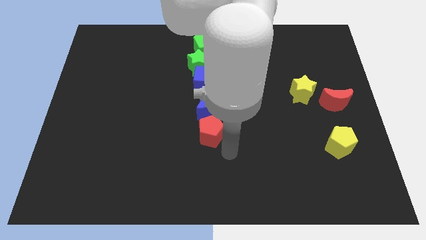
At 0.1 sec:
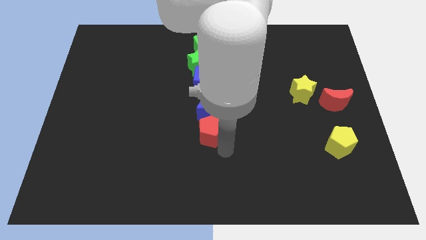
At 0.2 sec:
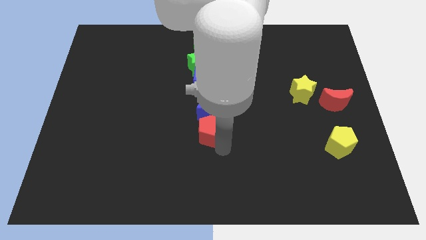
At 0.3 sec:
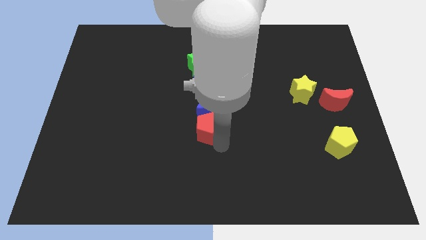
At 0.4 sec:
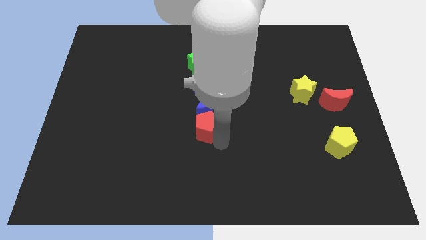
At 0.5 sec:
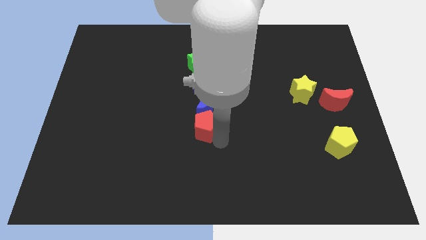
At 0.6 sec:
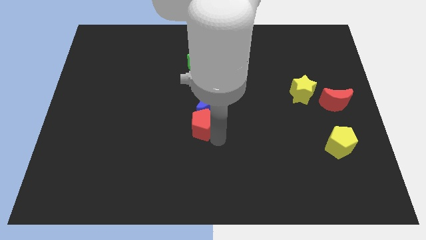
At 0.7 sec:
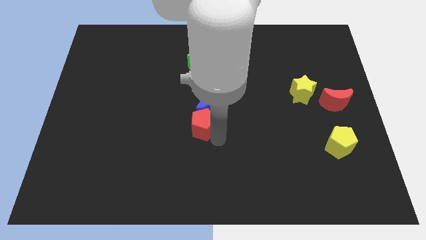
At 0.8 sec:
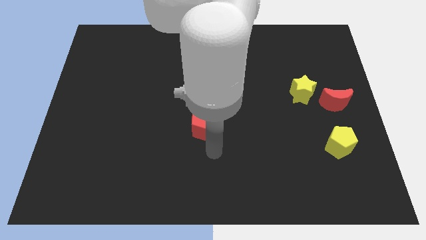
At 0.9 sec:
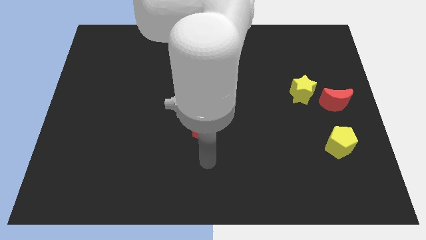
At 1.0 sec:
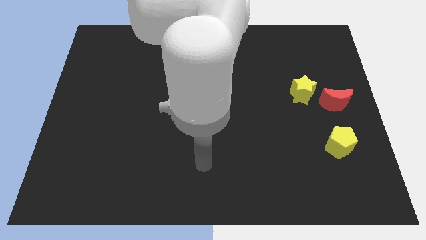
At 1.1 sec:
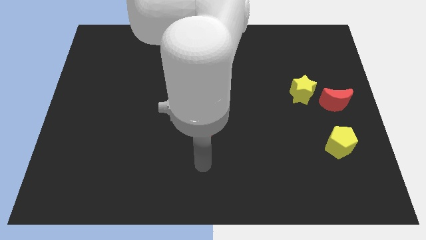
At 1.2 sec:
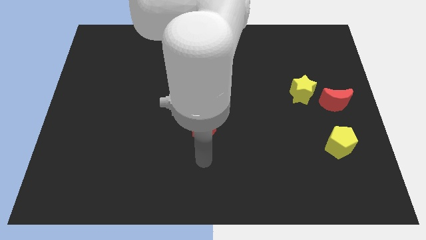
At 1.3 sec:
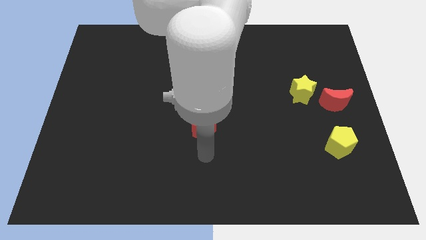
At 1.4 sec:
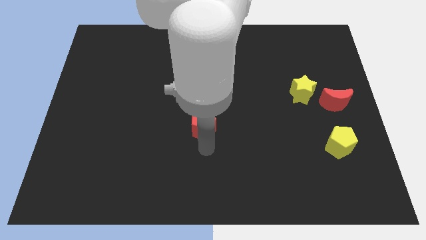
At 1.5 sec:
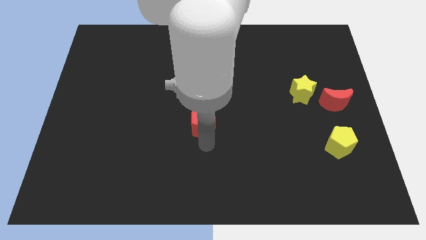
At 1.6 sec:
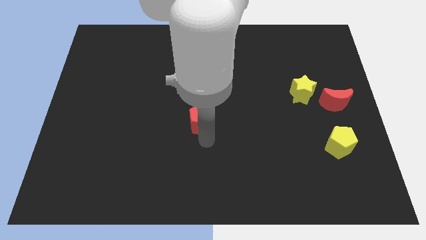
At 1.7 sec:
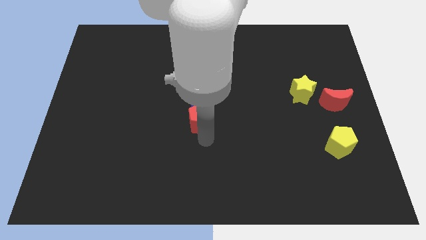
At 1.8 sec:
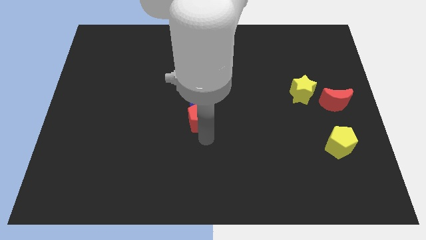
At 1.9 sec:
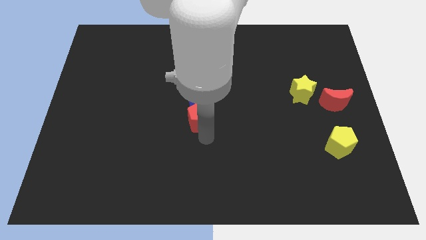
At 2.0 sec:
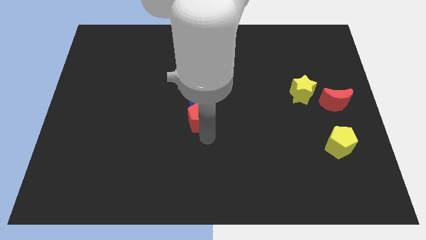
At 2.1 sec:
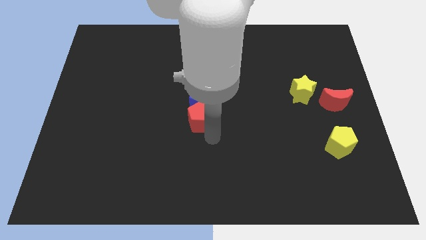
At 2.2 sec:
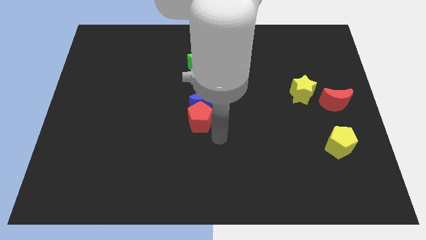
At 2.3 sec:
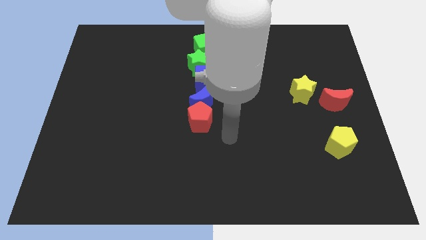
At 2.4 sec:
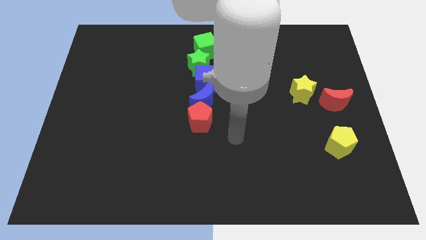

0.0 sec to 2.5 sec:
slide the red pentagon into the blue moon

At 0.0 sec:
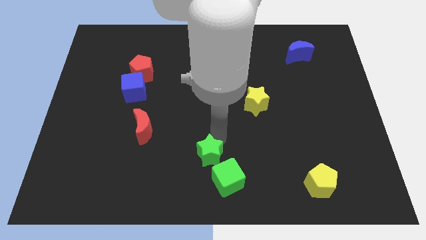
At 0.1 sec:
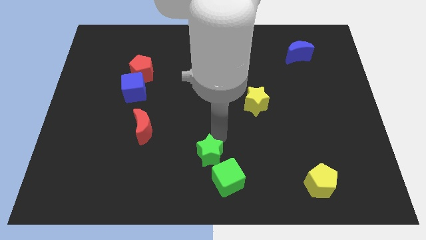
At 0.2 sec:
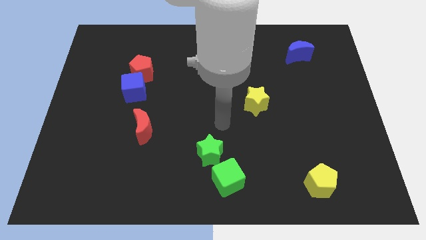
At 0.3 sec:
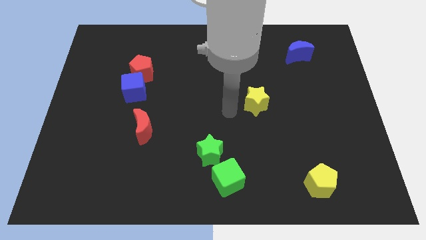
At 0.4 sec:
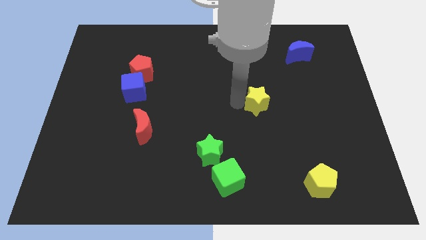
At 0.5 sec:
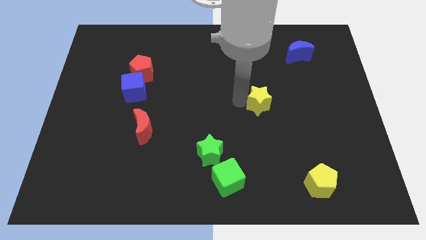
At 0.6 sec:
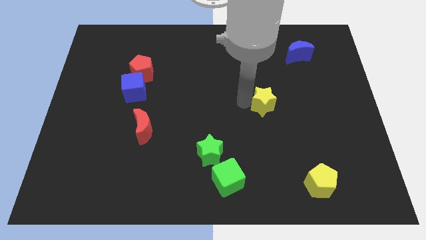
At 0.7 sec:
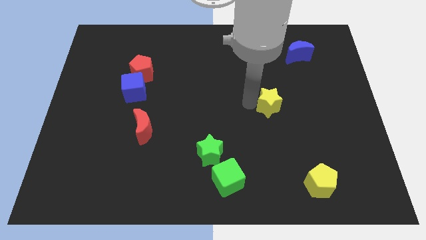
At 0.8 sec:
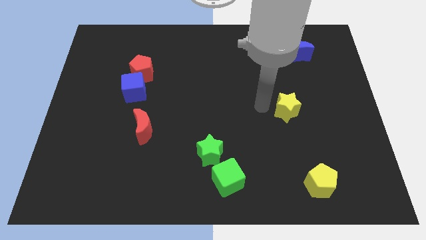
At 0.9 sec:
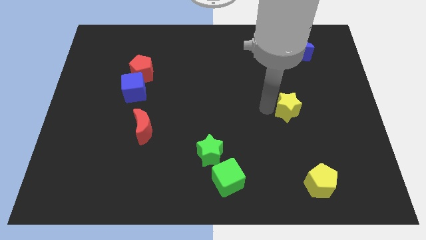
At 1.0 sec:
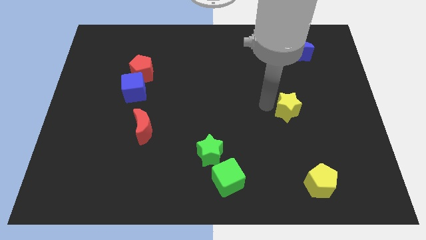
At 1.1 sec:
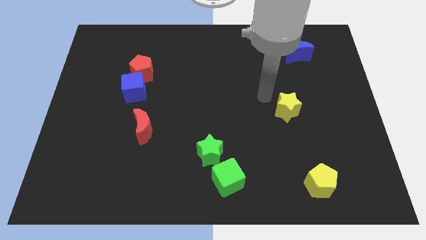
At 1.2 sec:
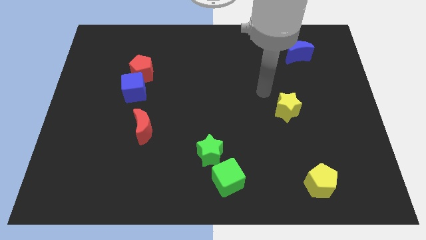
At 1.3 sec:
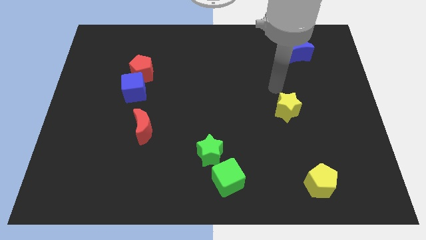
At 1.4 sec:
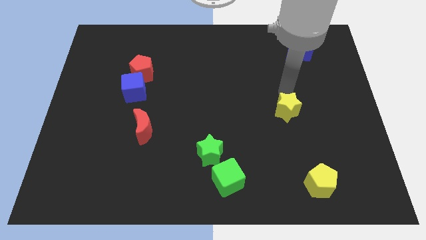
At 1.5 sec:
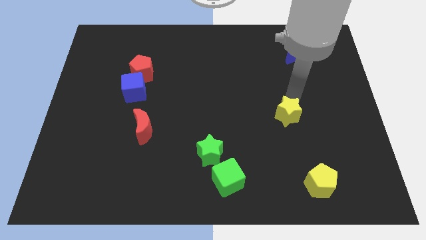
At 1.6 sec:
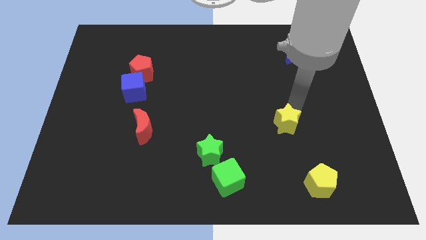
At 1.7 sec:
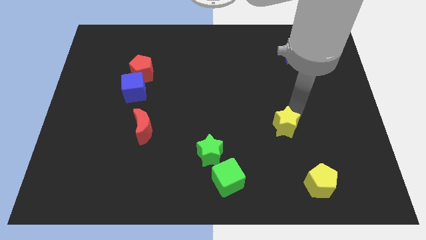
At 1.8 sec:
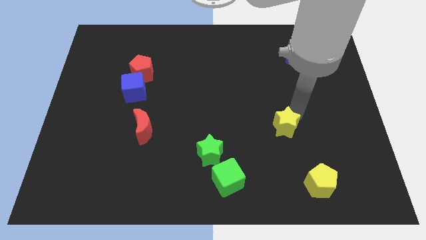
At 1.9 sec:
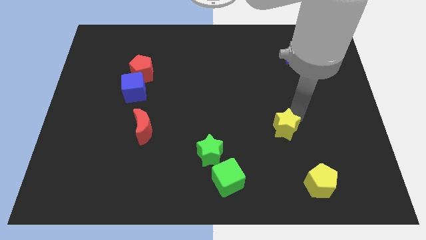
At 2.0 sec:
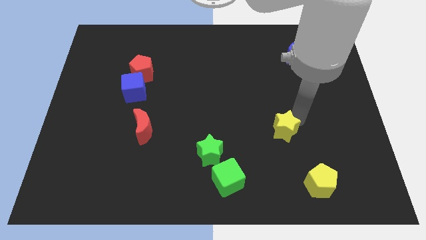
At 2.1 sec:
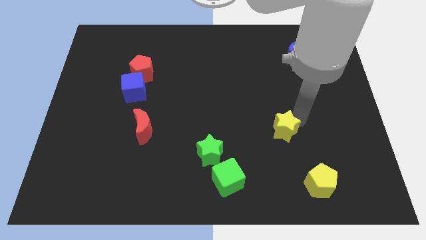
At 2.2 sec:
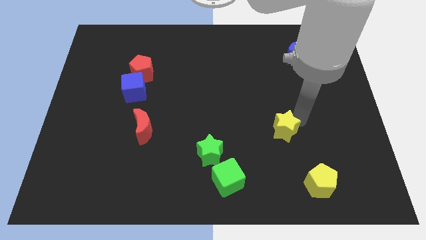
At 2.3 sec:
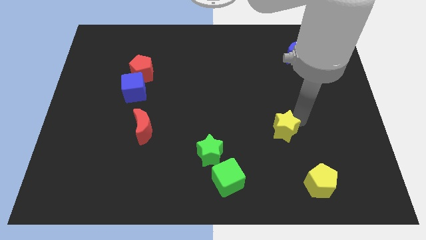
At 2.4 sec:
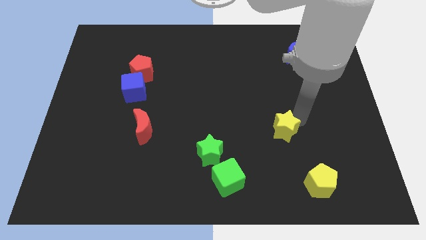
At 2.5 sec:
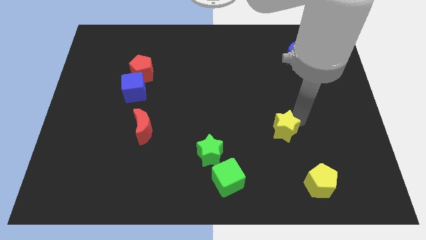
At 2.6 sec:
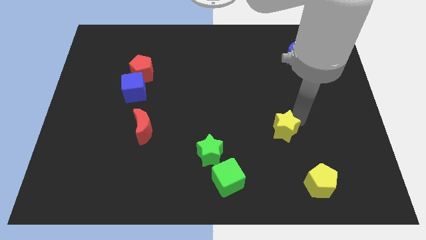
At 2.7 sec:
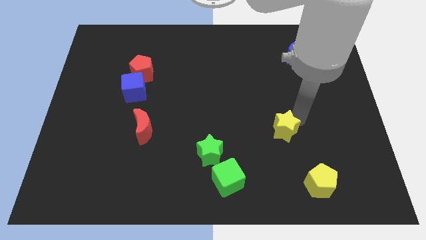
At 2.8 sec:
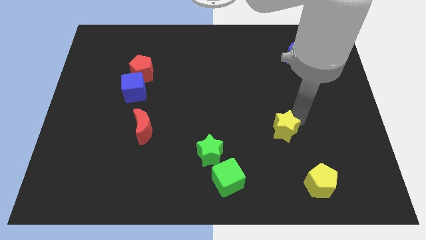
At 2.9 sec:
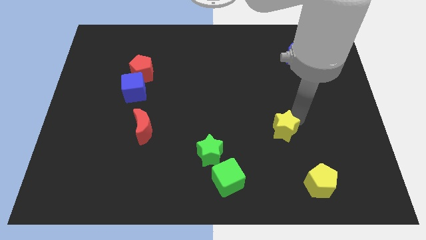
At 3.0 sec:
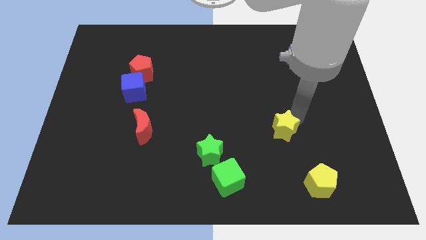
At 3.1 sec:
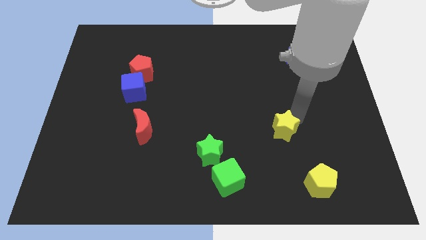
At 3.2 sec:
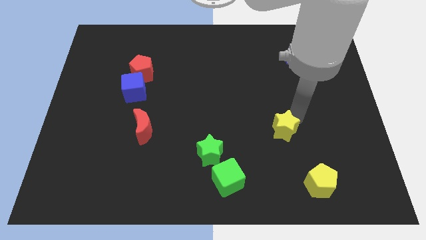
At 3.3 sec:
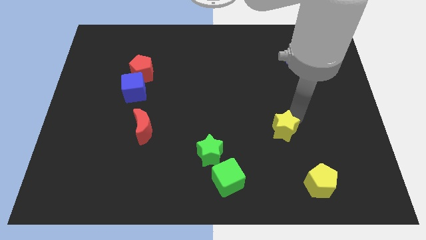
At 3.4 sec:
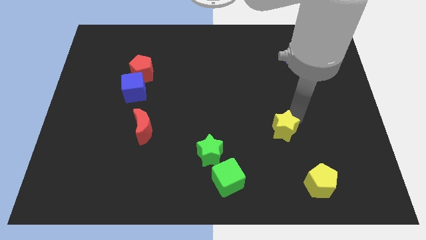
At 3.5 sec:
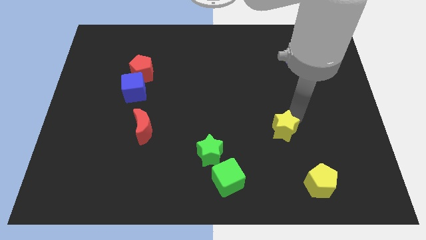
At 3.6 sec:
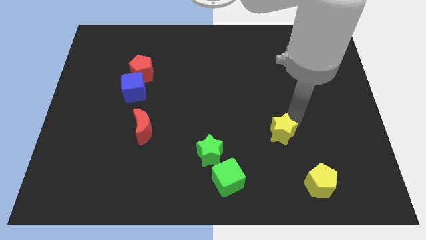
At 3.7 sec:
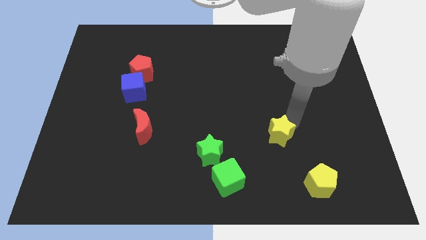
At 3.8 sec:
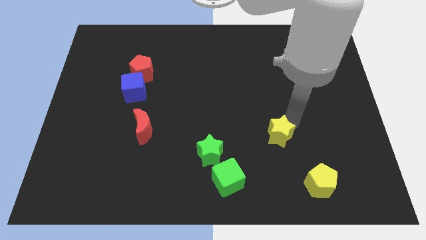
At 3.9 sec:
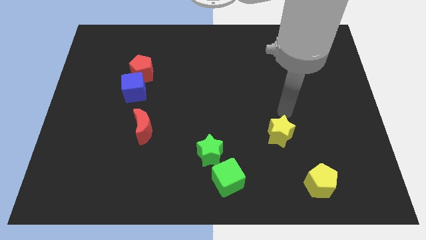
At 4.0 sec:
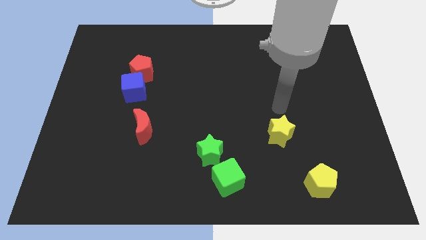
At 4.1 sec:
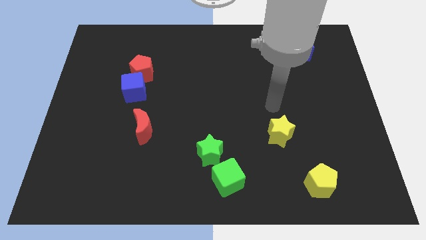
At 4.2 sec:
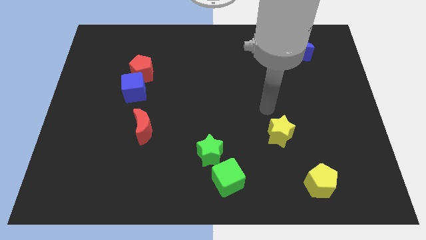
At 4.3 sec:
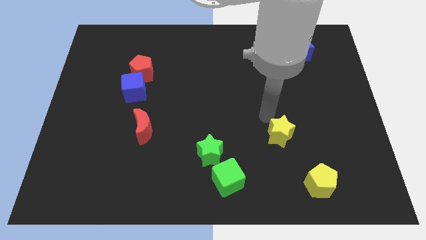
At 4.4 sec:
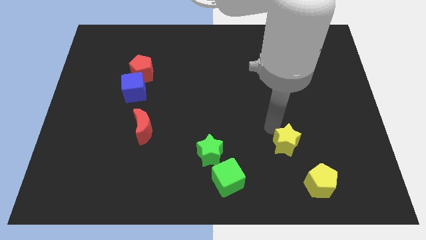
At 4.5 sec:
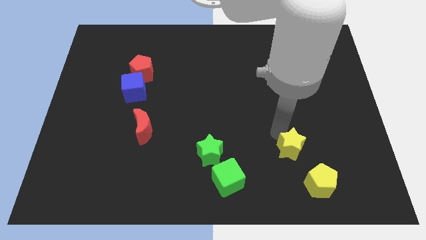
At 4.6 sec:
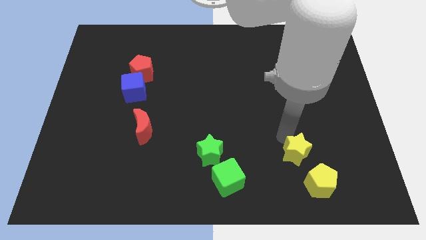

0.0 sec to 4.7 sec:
place yellow star diagonally towards the top left of the yellow pentagon

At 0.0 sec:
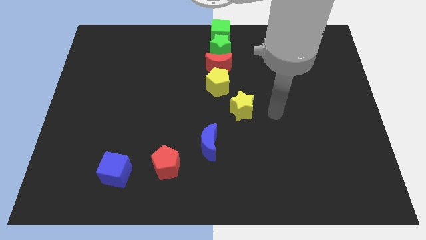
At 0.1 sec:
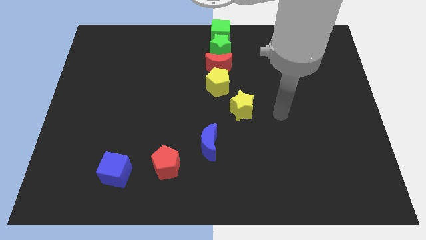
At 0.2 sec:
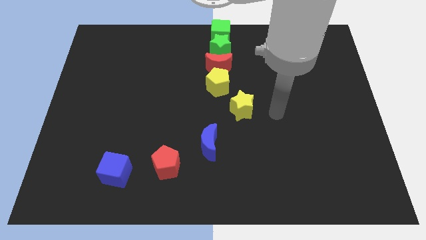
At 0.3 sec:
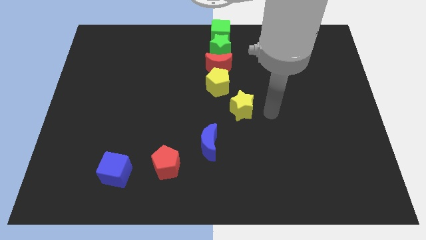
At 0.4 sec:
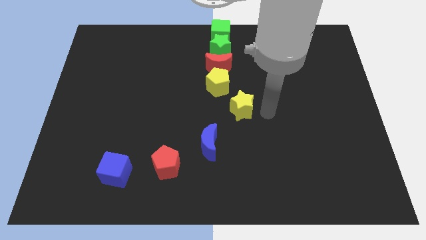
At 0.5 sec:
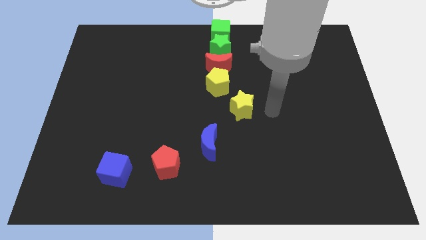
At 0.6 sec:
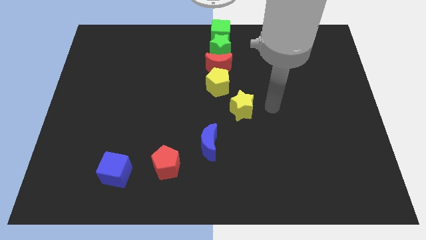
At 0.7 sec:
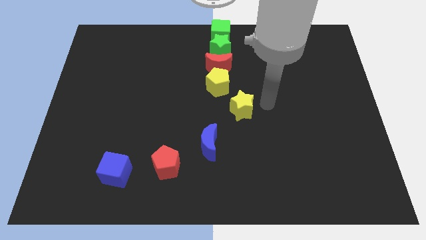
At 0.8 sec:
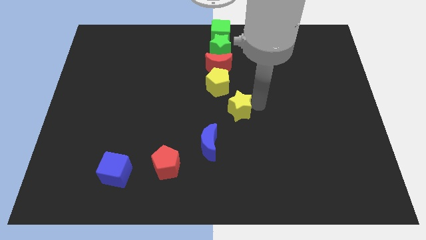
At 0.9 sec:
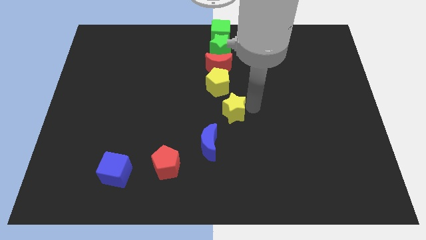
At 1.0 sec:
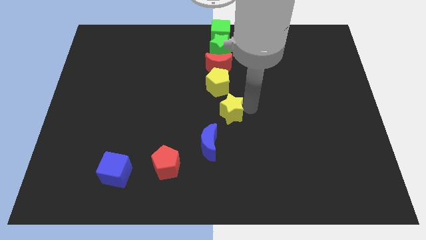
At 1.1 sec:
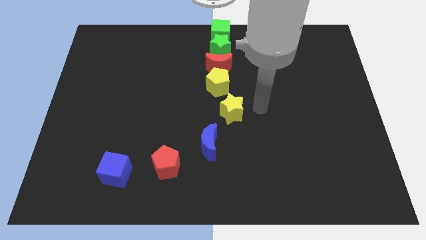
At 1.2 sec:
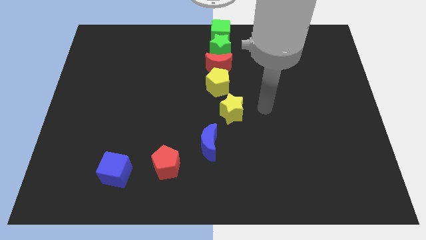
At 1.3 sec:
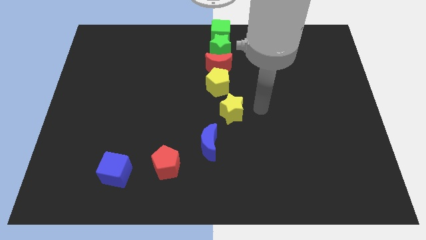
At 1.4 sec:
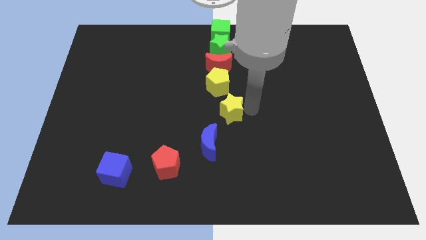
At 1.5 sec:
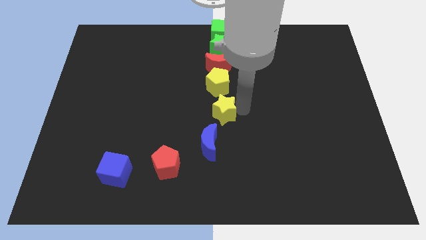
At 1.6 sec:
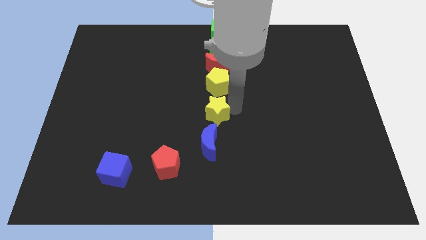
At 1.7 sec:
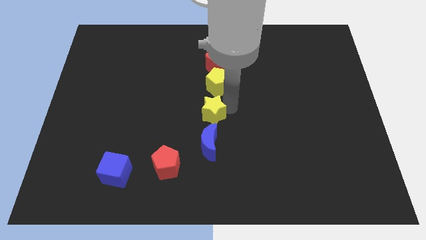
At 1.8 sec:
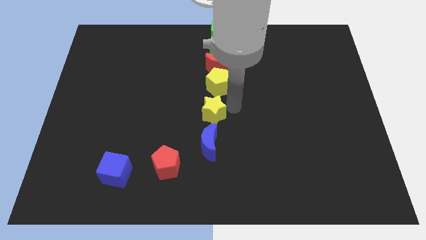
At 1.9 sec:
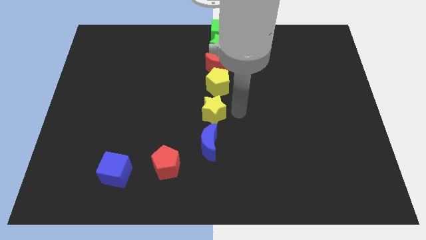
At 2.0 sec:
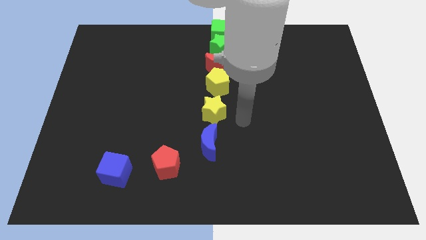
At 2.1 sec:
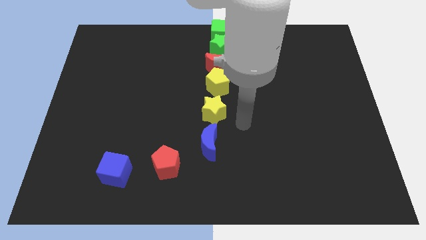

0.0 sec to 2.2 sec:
place the yellow star below the yellow pentagon
